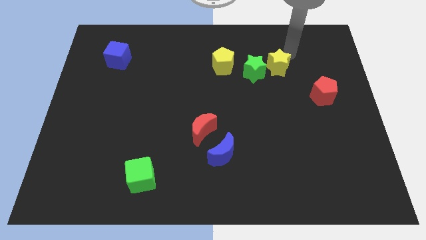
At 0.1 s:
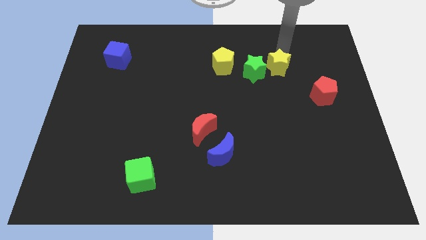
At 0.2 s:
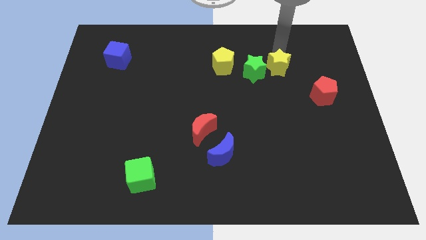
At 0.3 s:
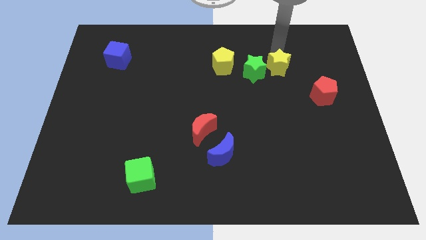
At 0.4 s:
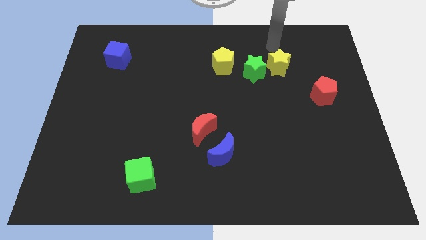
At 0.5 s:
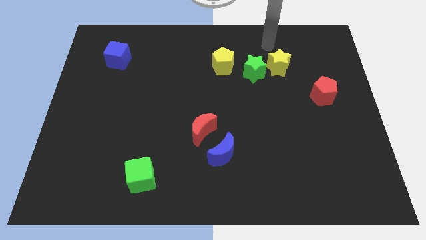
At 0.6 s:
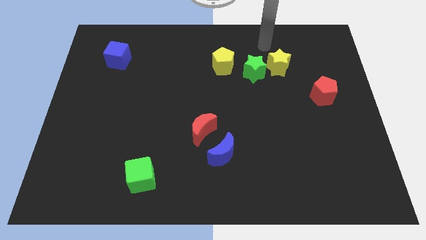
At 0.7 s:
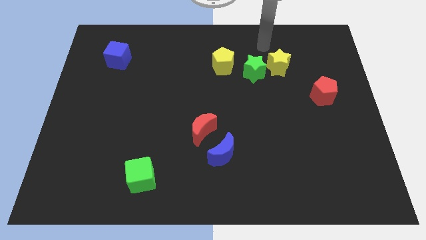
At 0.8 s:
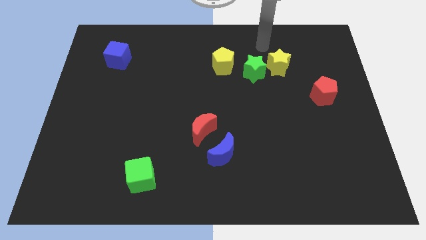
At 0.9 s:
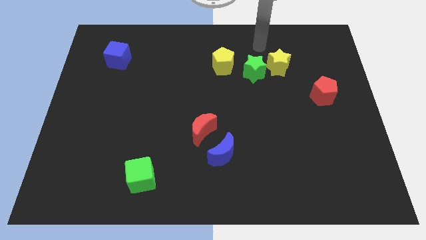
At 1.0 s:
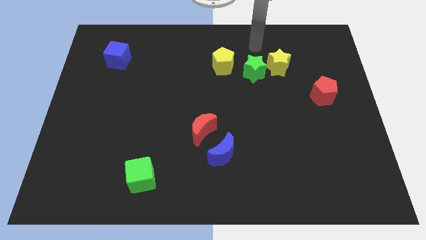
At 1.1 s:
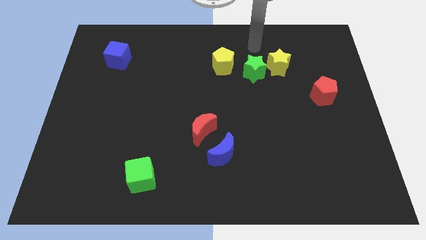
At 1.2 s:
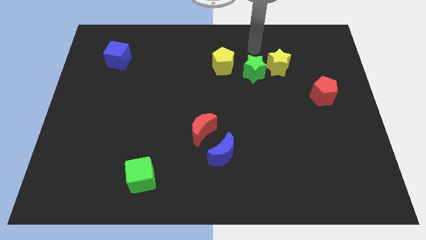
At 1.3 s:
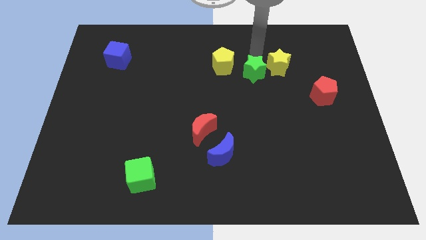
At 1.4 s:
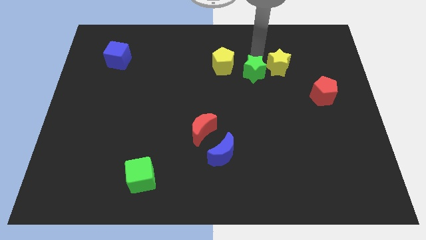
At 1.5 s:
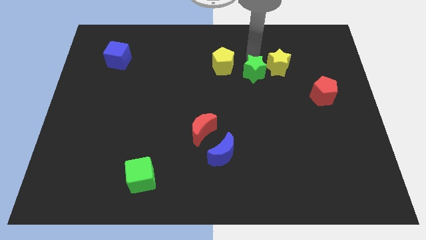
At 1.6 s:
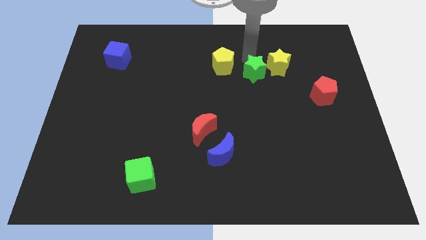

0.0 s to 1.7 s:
slightly push the green star to the downwards

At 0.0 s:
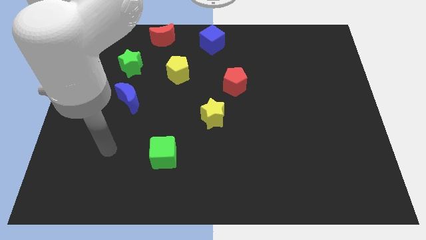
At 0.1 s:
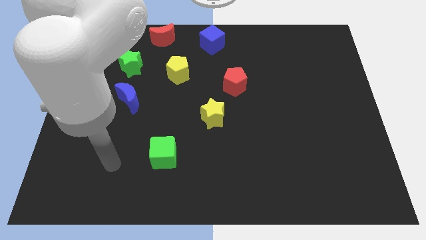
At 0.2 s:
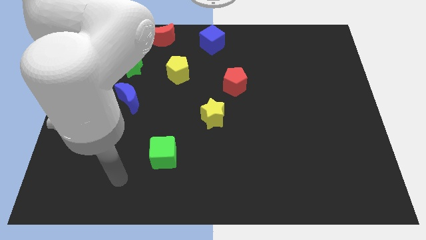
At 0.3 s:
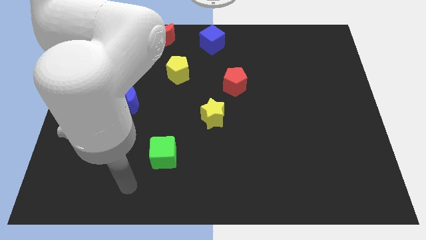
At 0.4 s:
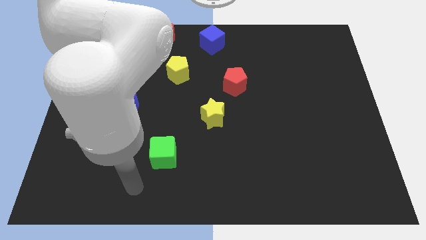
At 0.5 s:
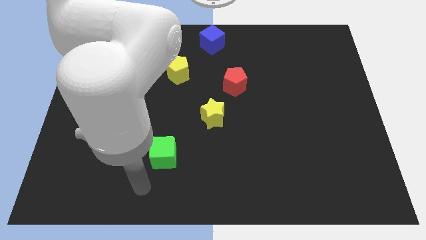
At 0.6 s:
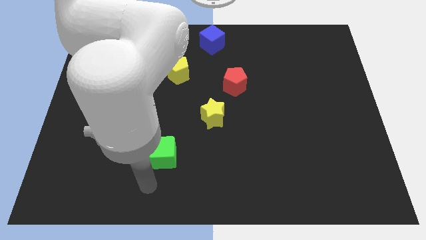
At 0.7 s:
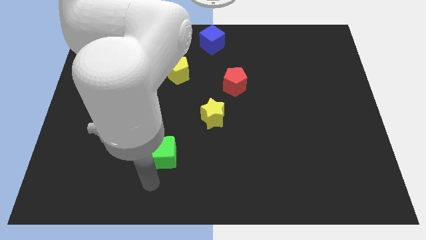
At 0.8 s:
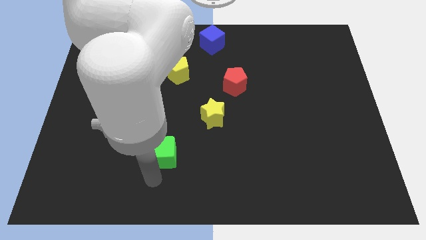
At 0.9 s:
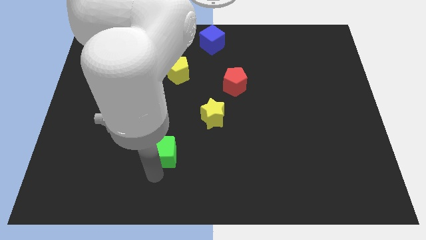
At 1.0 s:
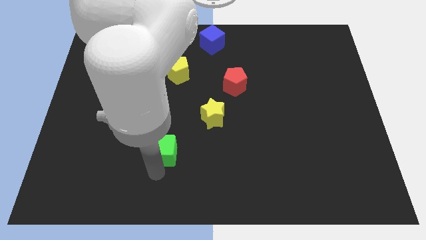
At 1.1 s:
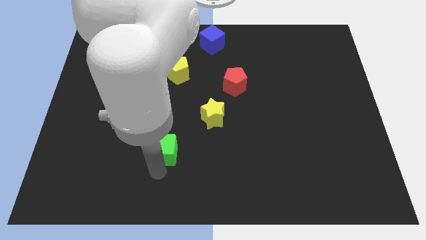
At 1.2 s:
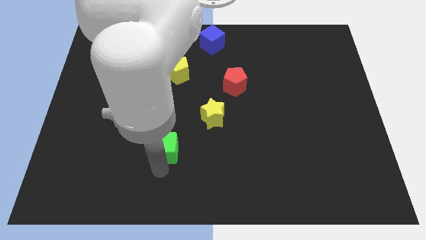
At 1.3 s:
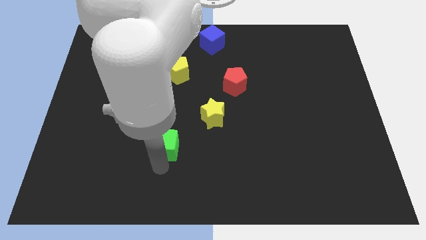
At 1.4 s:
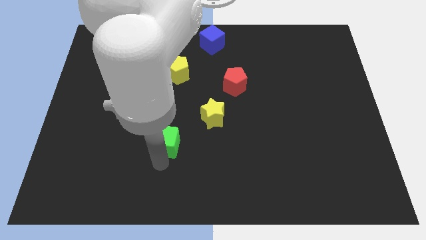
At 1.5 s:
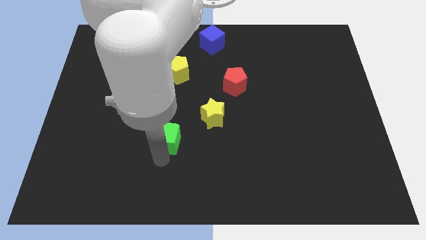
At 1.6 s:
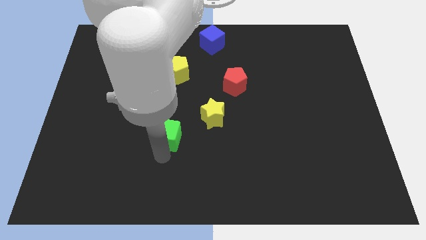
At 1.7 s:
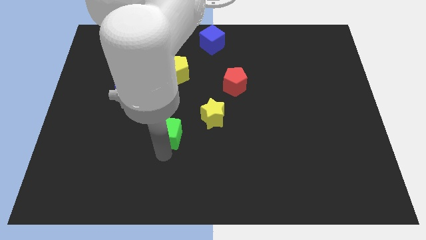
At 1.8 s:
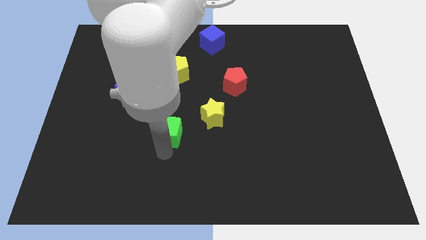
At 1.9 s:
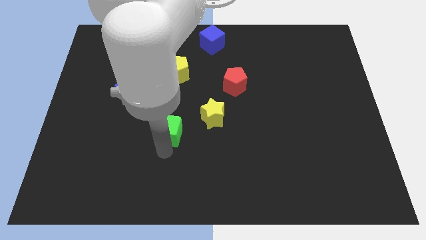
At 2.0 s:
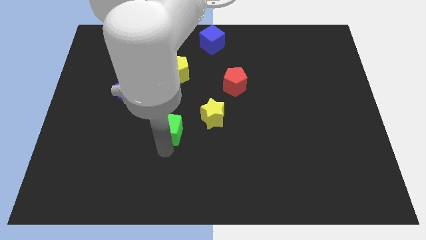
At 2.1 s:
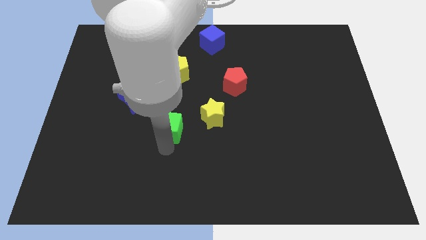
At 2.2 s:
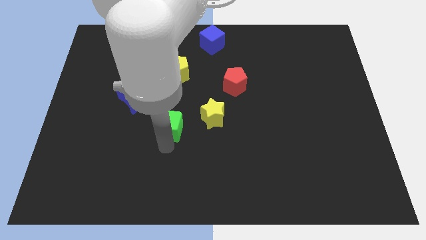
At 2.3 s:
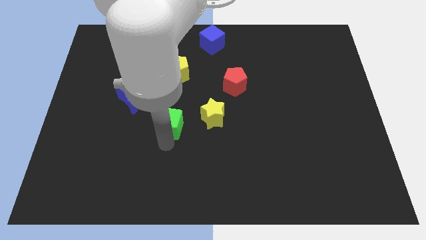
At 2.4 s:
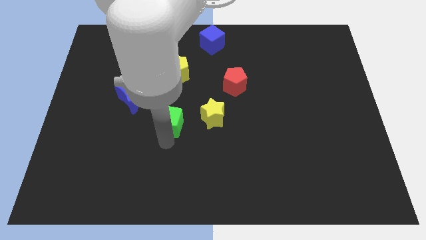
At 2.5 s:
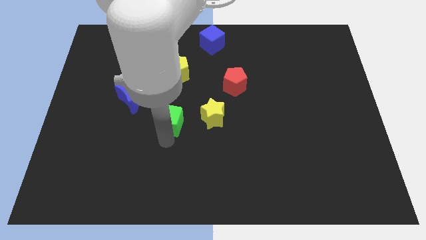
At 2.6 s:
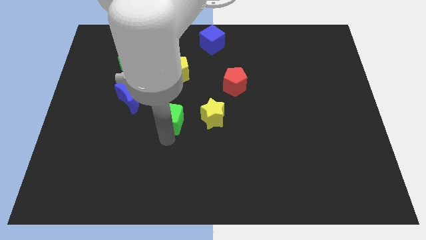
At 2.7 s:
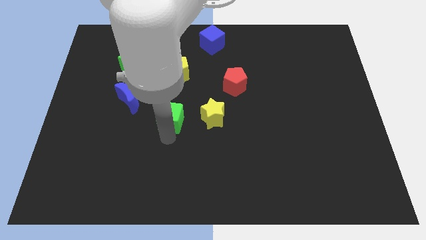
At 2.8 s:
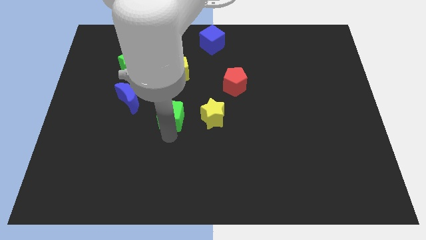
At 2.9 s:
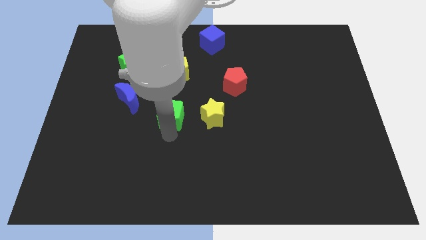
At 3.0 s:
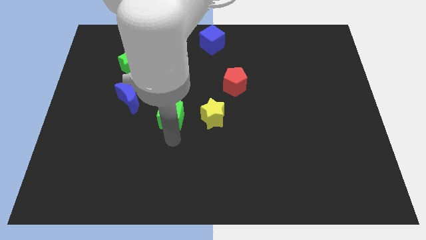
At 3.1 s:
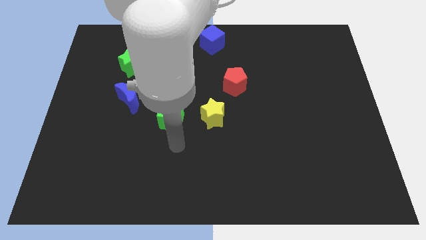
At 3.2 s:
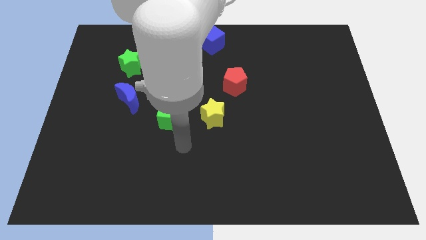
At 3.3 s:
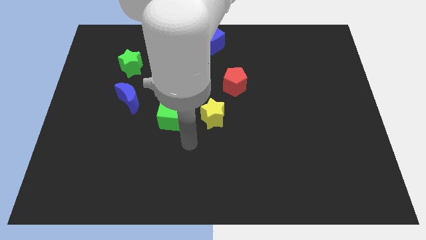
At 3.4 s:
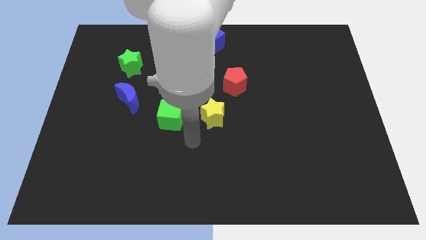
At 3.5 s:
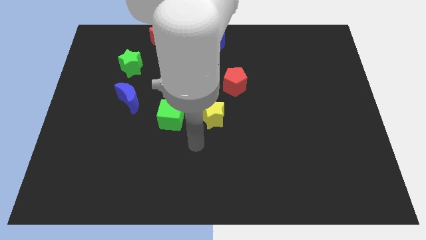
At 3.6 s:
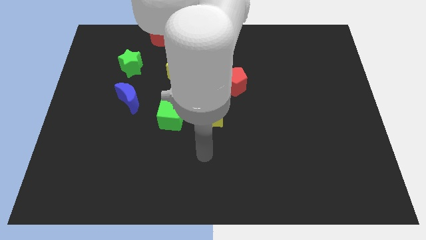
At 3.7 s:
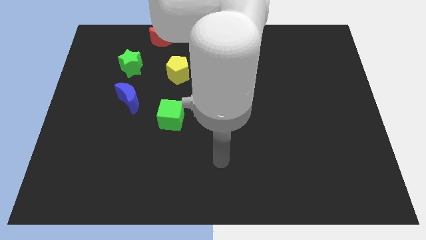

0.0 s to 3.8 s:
push the green cube to the center of the board

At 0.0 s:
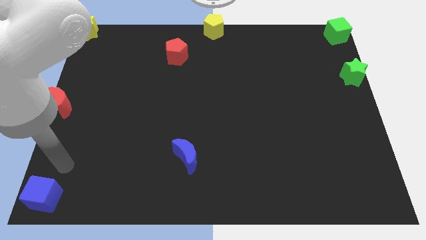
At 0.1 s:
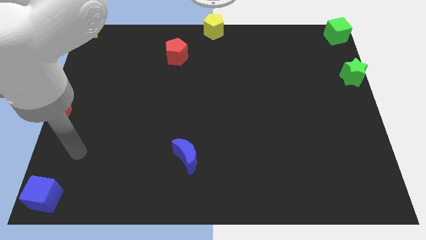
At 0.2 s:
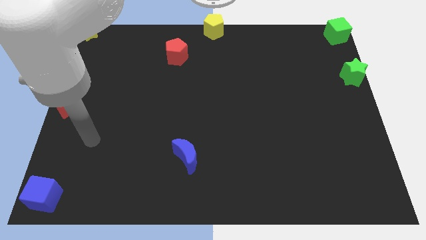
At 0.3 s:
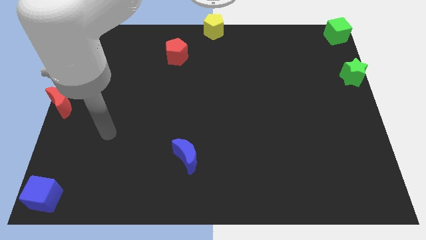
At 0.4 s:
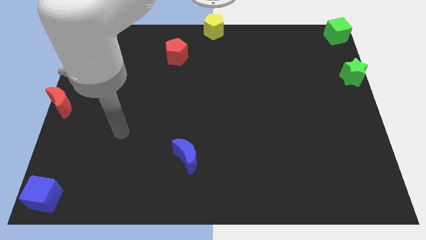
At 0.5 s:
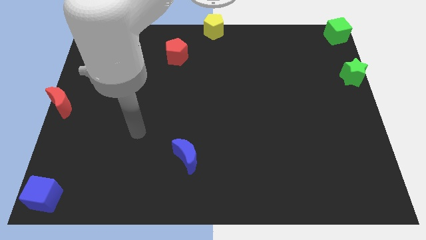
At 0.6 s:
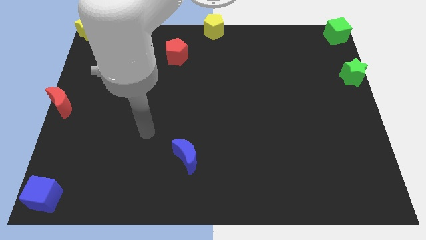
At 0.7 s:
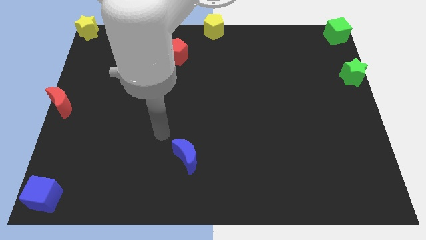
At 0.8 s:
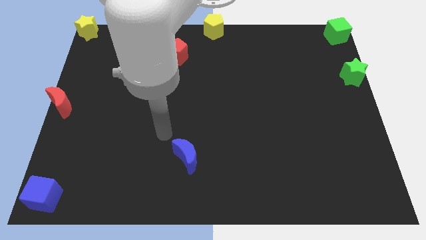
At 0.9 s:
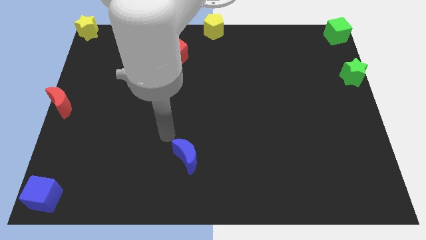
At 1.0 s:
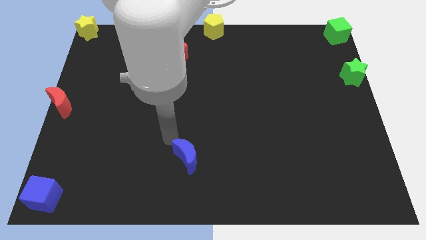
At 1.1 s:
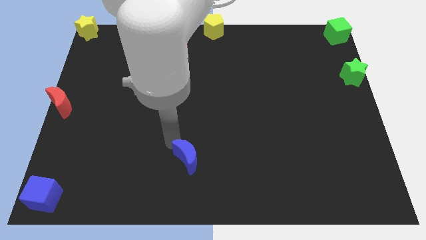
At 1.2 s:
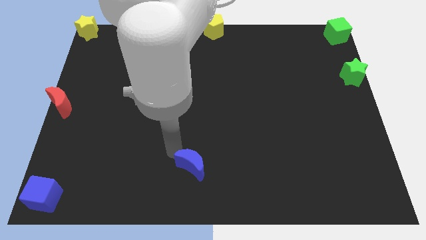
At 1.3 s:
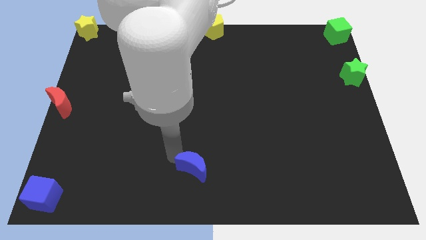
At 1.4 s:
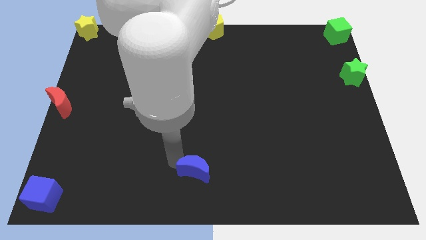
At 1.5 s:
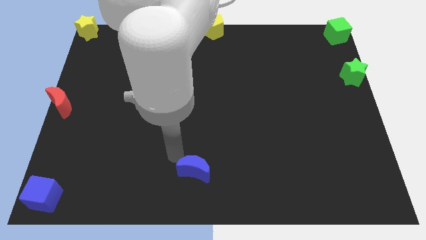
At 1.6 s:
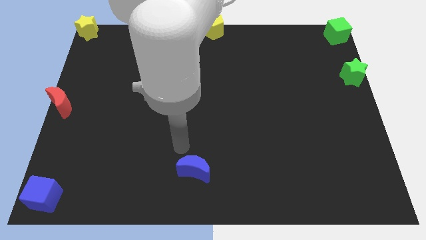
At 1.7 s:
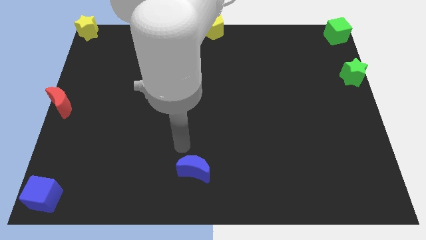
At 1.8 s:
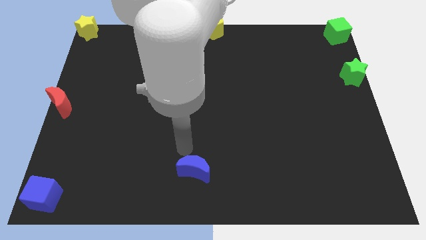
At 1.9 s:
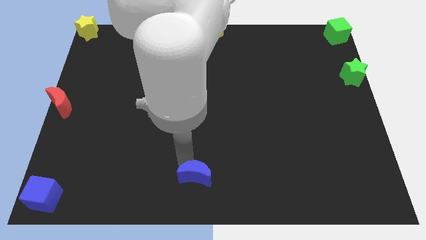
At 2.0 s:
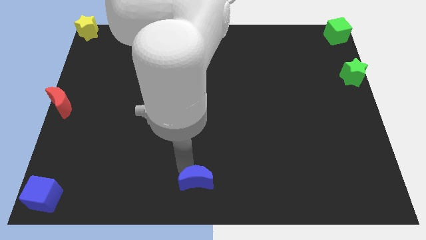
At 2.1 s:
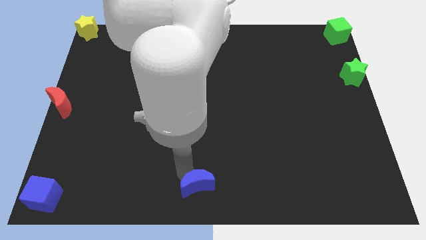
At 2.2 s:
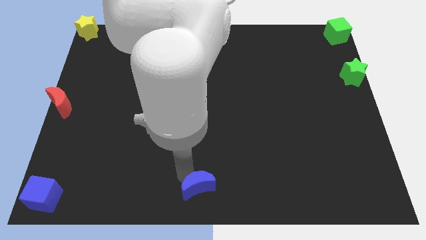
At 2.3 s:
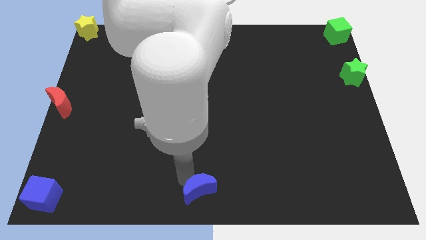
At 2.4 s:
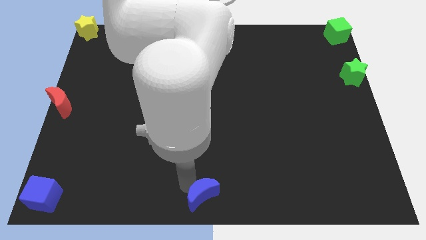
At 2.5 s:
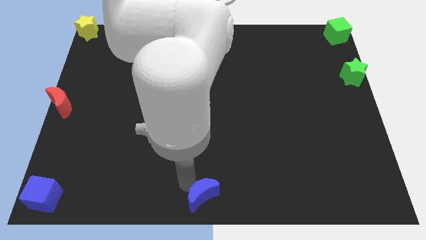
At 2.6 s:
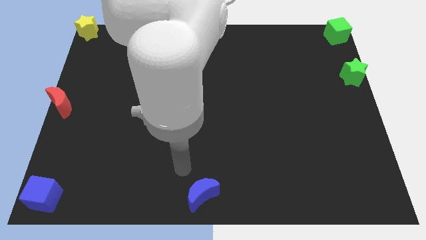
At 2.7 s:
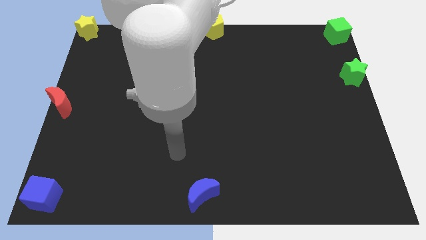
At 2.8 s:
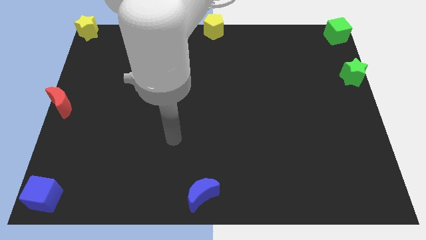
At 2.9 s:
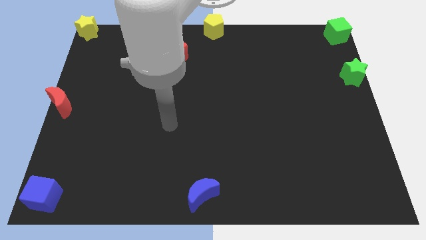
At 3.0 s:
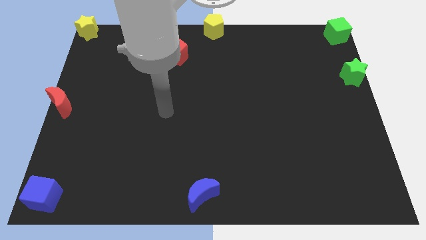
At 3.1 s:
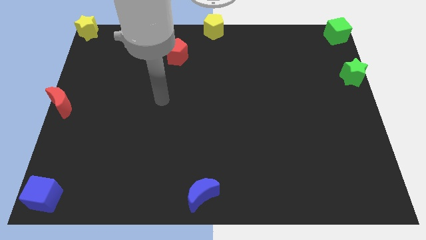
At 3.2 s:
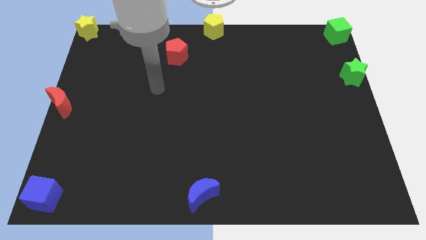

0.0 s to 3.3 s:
push the blue crescent to the bottom center of the board

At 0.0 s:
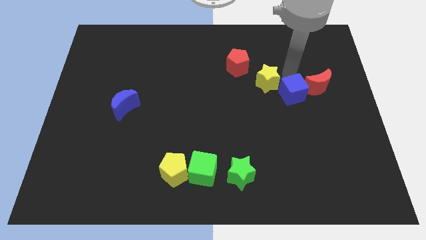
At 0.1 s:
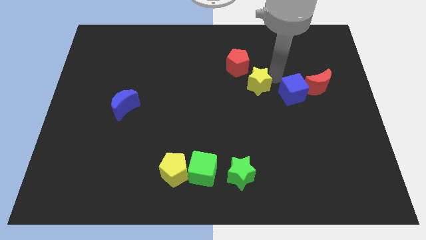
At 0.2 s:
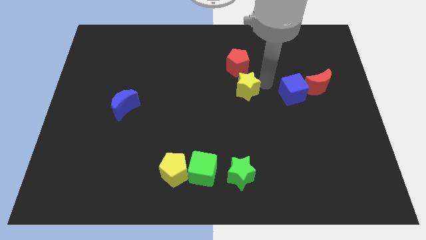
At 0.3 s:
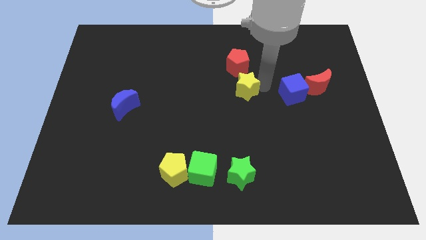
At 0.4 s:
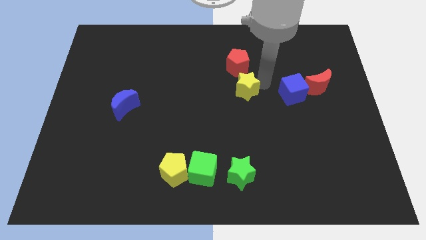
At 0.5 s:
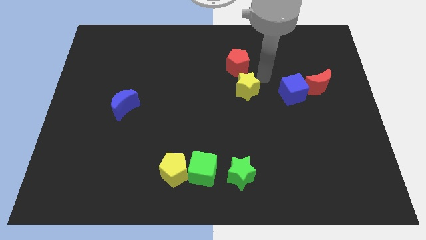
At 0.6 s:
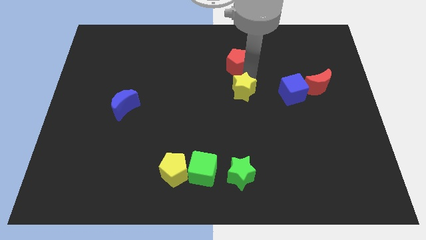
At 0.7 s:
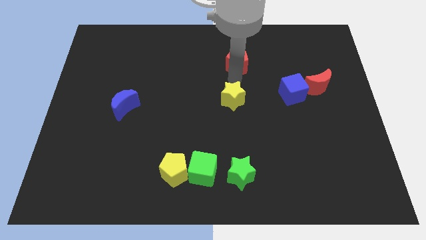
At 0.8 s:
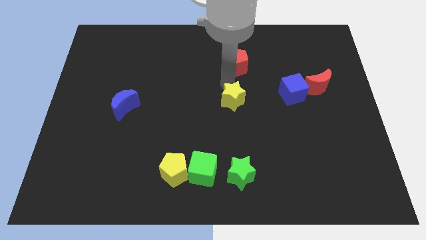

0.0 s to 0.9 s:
place the yellow star at center of the board
